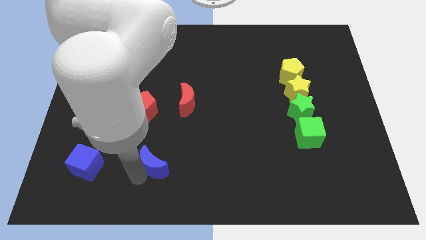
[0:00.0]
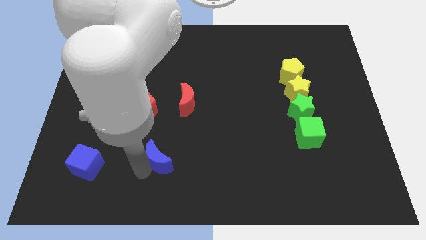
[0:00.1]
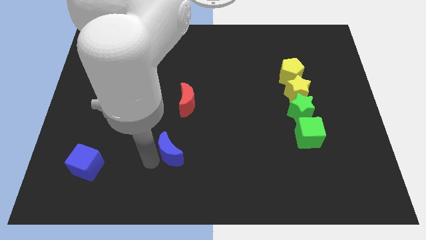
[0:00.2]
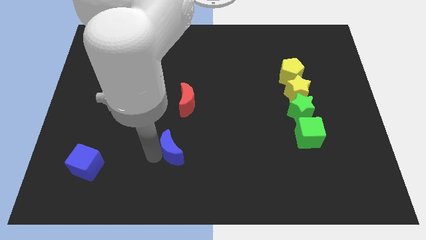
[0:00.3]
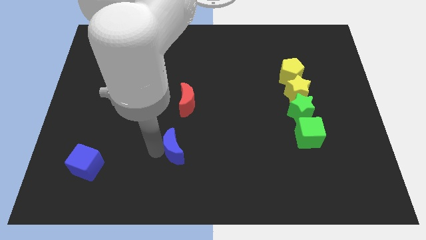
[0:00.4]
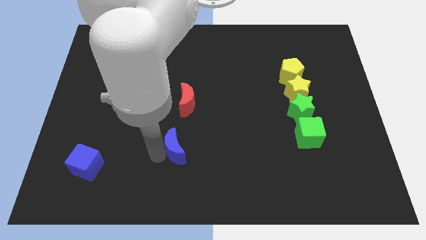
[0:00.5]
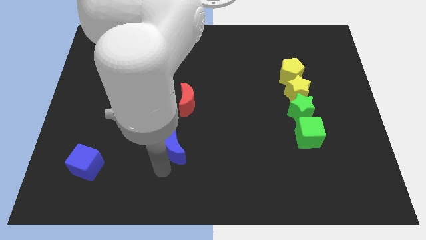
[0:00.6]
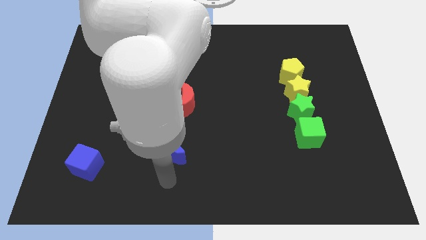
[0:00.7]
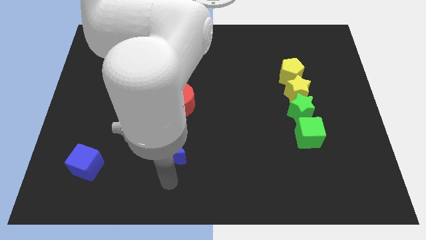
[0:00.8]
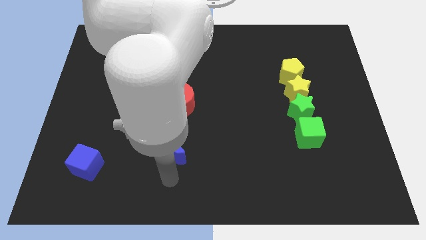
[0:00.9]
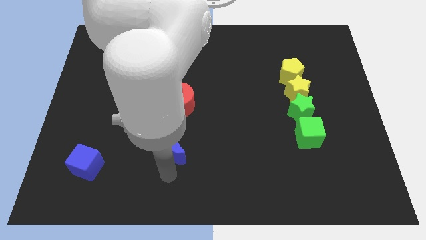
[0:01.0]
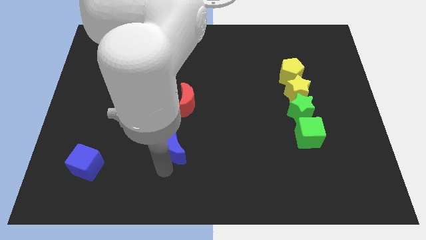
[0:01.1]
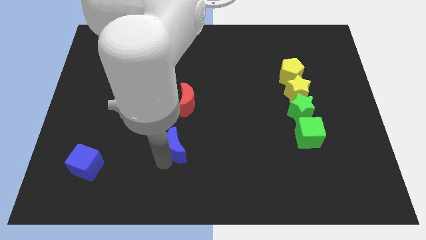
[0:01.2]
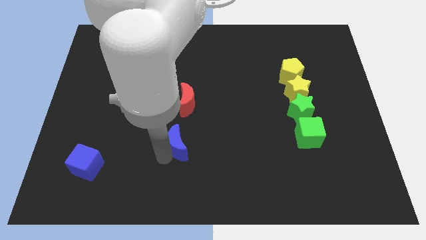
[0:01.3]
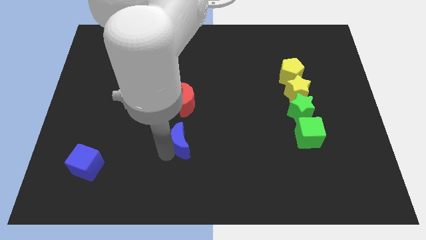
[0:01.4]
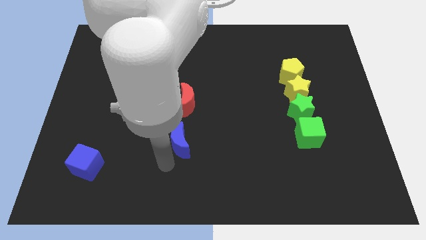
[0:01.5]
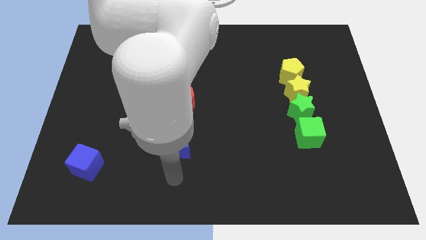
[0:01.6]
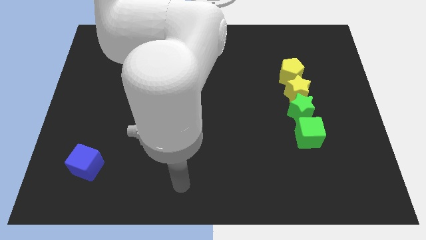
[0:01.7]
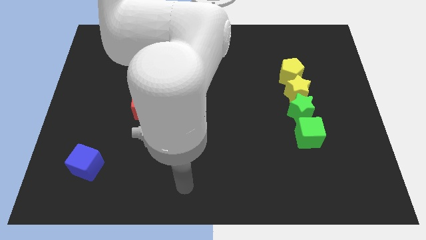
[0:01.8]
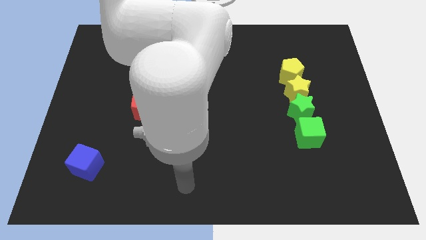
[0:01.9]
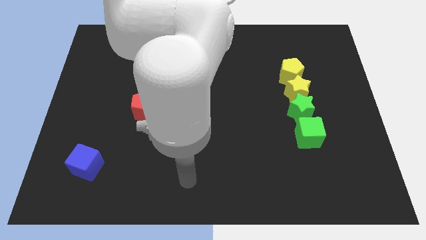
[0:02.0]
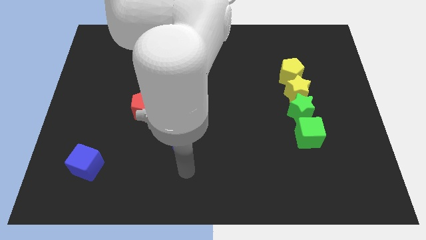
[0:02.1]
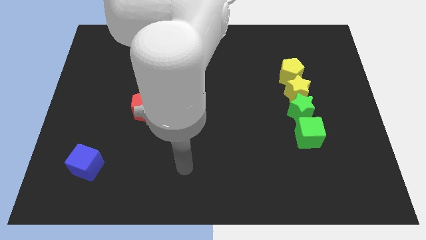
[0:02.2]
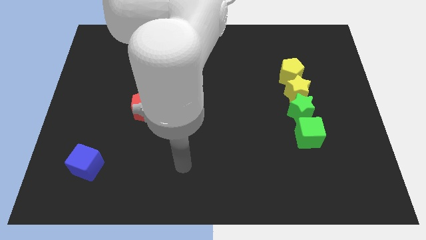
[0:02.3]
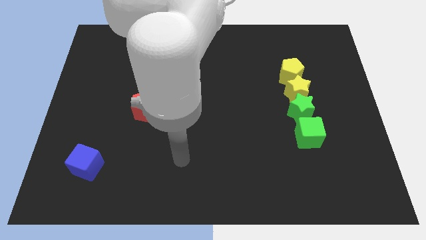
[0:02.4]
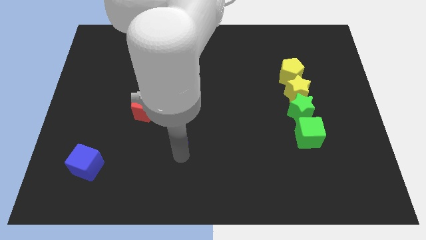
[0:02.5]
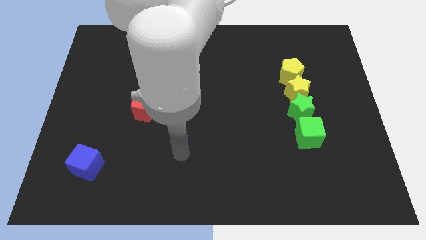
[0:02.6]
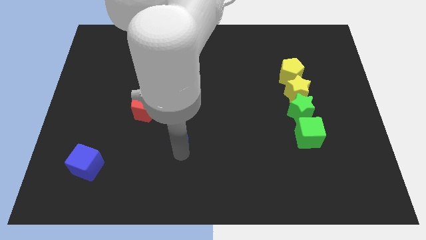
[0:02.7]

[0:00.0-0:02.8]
move the blue crescent to the bottom of the red crescent

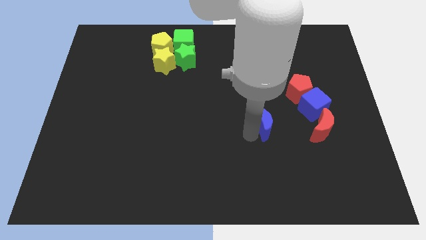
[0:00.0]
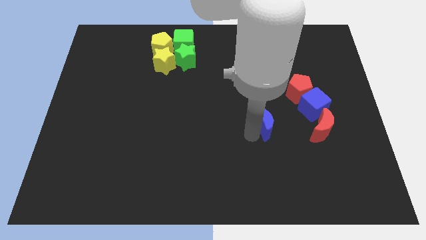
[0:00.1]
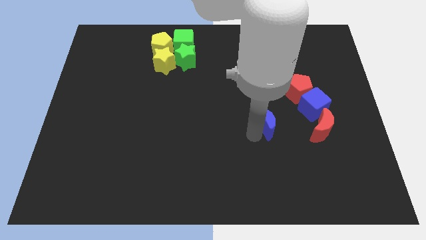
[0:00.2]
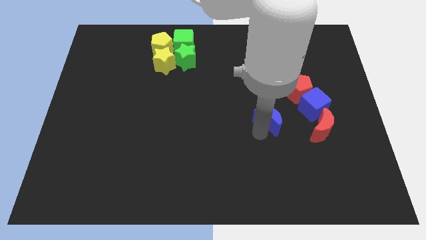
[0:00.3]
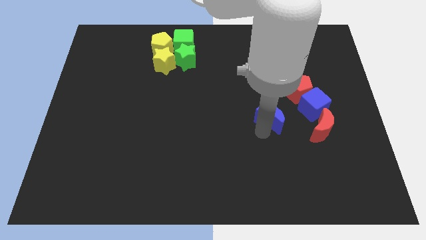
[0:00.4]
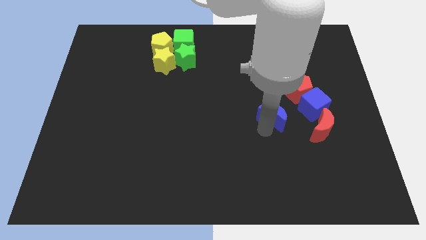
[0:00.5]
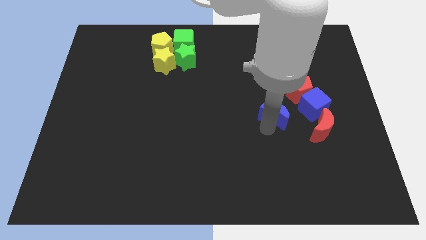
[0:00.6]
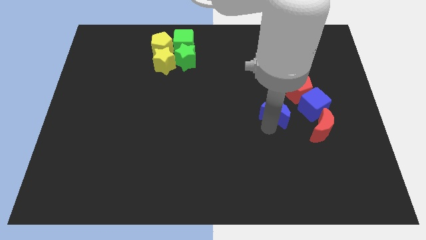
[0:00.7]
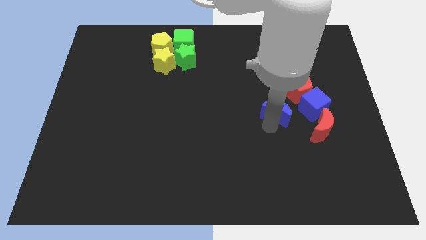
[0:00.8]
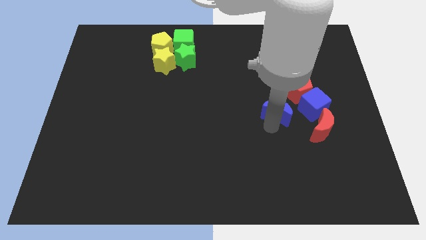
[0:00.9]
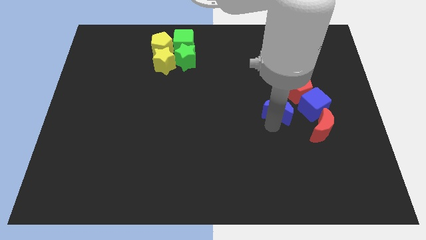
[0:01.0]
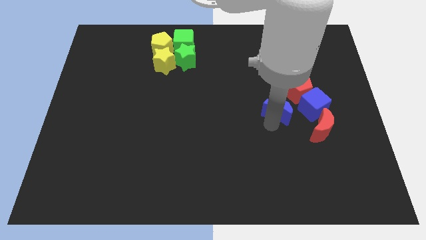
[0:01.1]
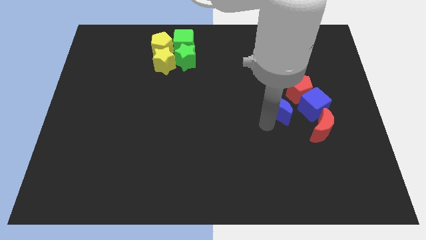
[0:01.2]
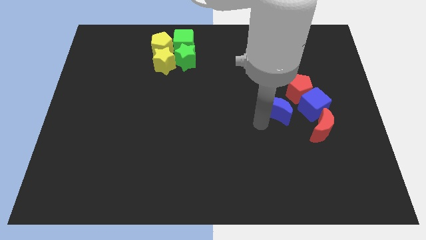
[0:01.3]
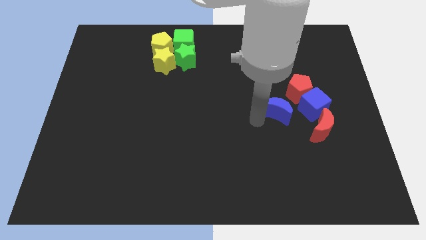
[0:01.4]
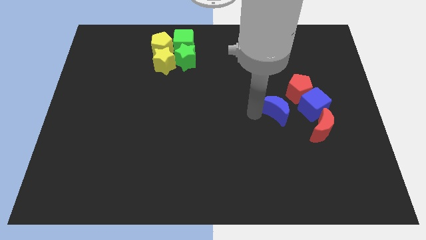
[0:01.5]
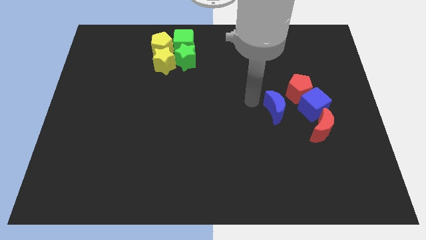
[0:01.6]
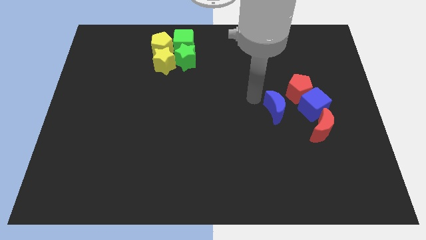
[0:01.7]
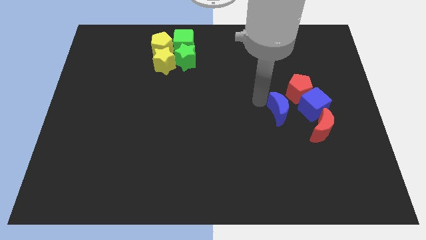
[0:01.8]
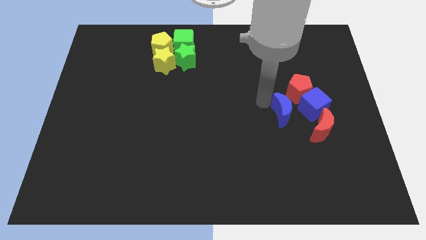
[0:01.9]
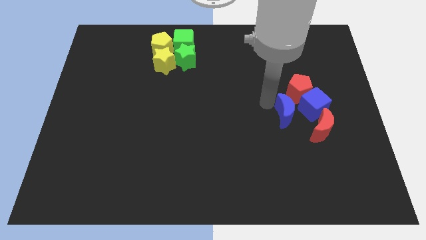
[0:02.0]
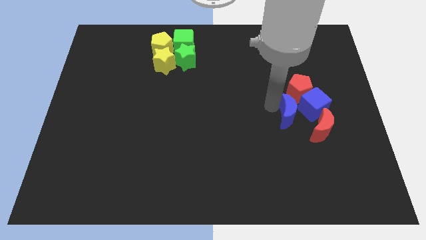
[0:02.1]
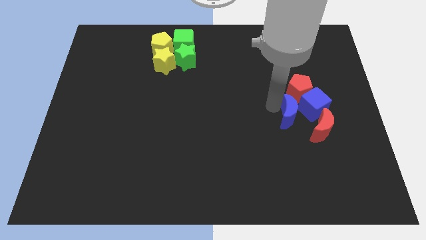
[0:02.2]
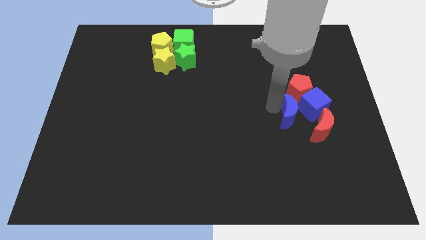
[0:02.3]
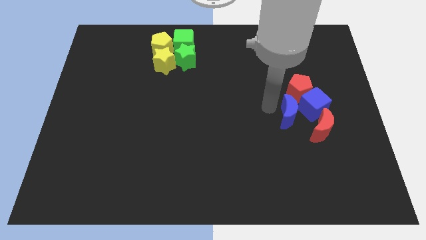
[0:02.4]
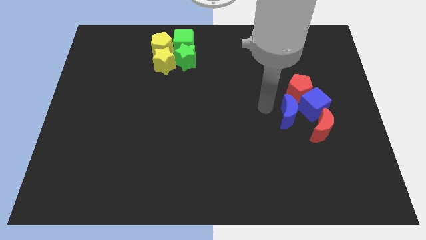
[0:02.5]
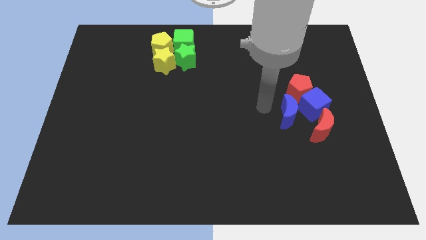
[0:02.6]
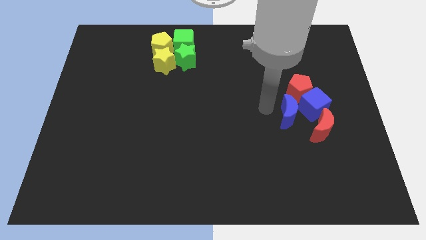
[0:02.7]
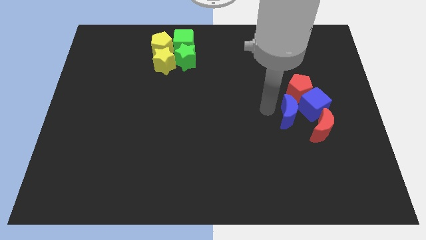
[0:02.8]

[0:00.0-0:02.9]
move blue moon to the left of blue cube

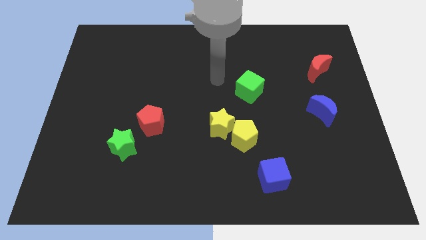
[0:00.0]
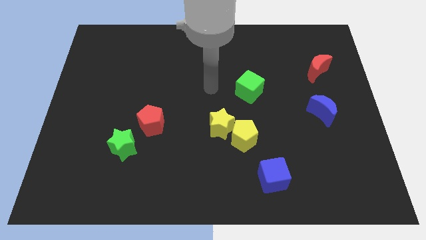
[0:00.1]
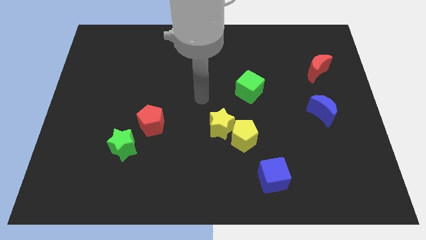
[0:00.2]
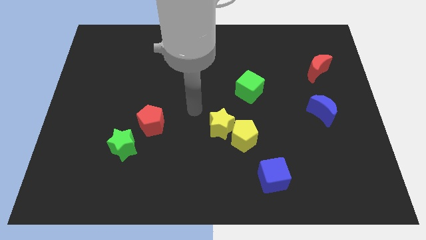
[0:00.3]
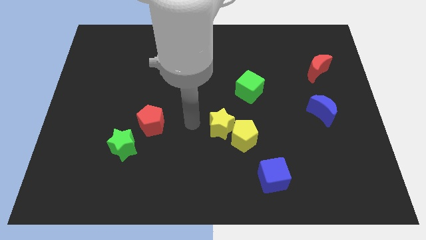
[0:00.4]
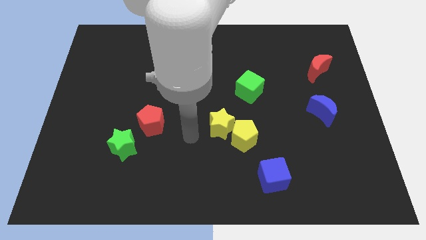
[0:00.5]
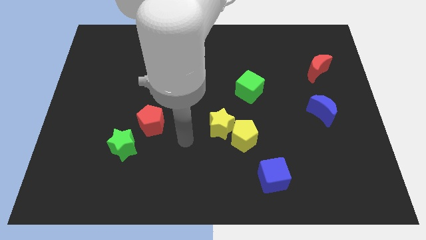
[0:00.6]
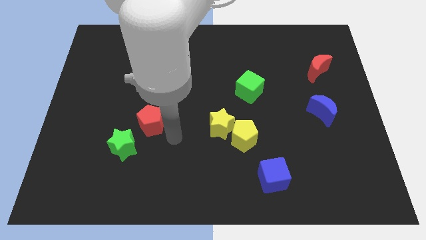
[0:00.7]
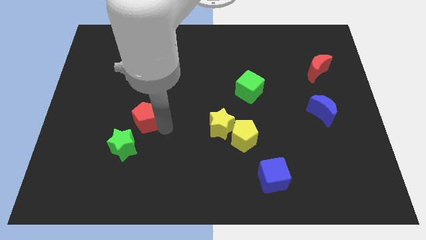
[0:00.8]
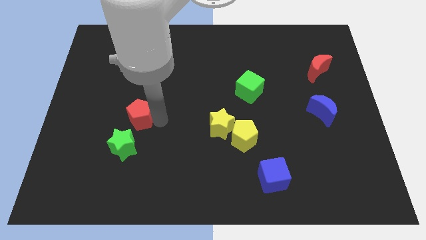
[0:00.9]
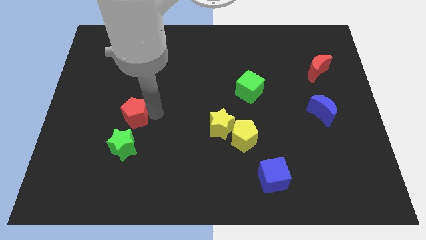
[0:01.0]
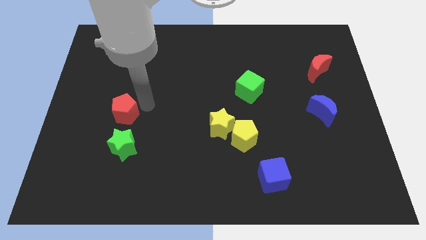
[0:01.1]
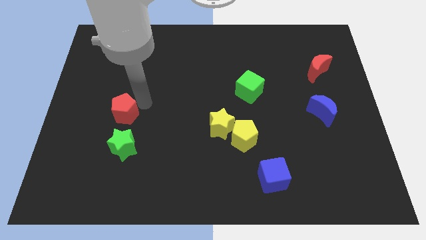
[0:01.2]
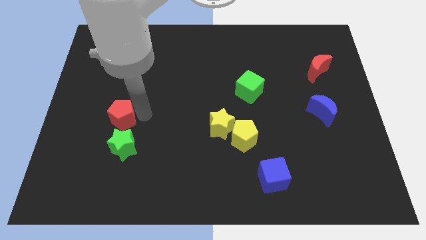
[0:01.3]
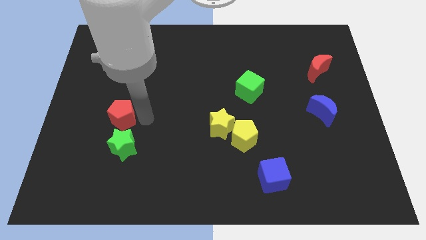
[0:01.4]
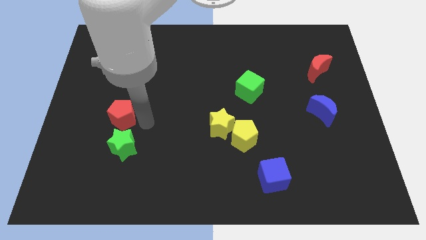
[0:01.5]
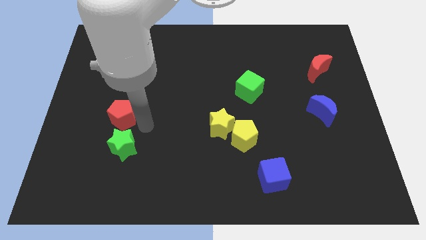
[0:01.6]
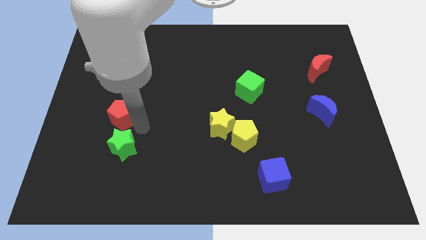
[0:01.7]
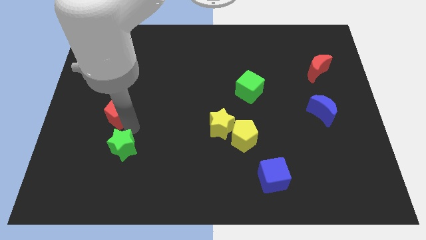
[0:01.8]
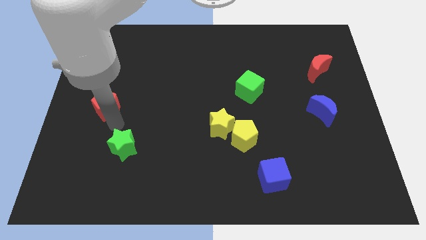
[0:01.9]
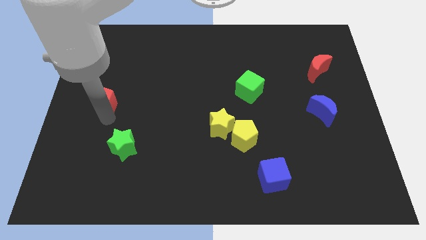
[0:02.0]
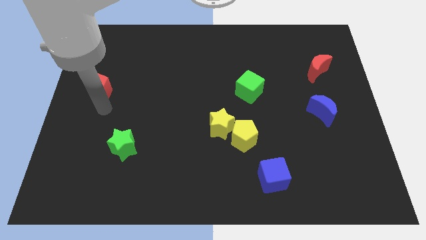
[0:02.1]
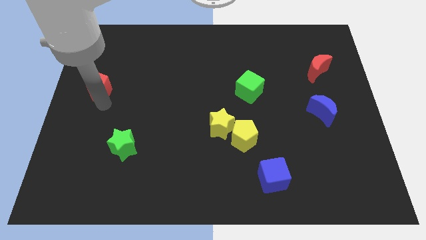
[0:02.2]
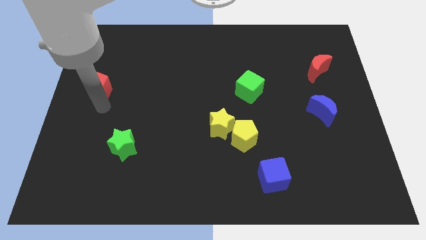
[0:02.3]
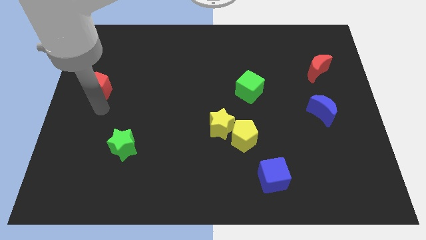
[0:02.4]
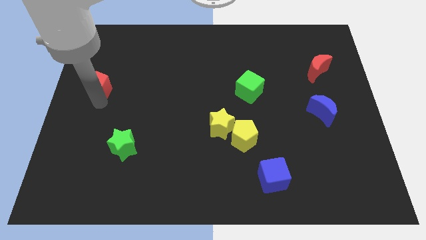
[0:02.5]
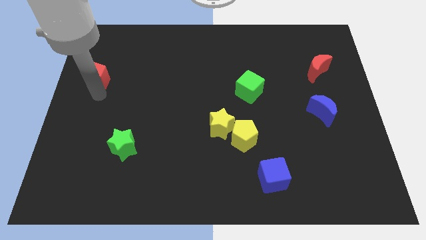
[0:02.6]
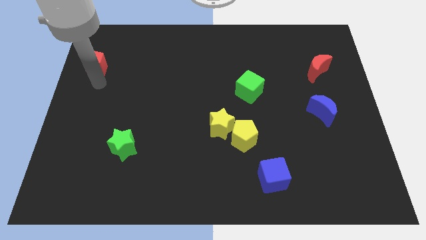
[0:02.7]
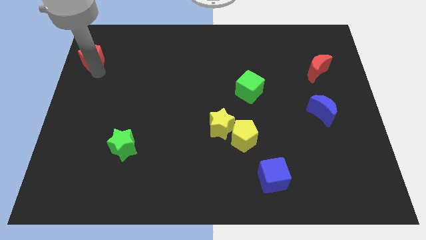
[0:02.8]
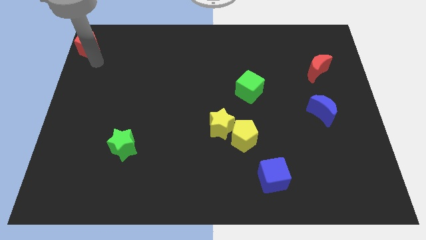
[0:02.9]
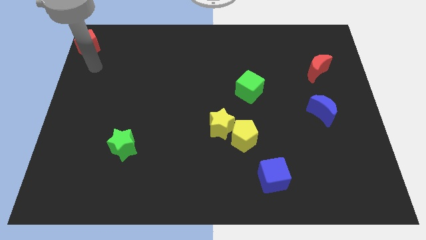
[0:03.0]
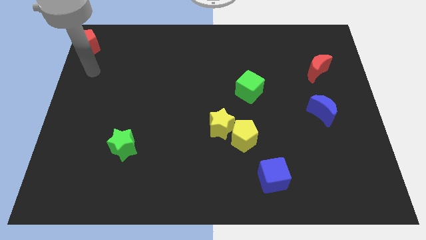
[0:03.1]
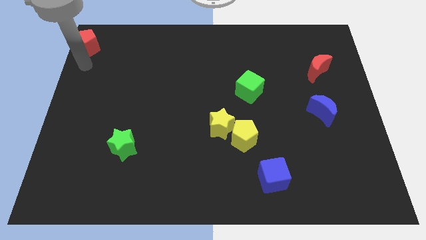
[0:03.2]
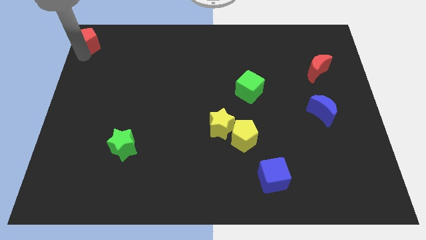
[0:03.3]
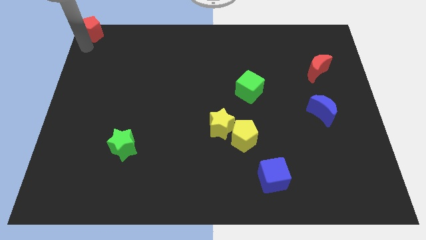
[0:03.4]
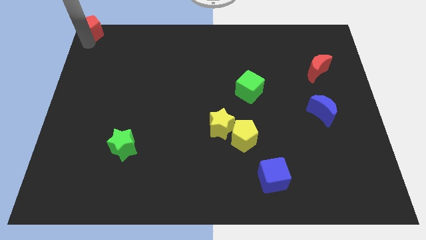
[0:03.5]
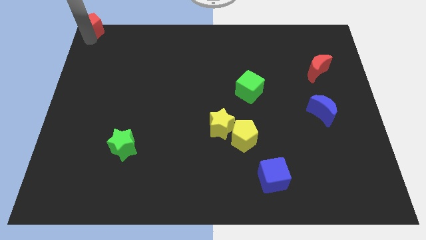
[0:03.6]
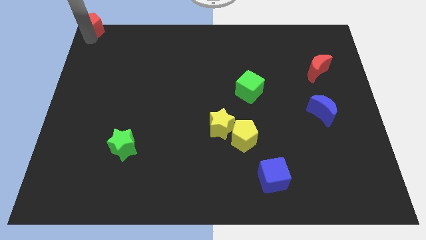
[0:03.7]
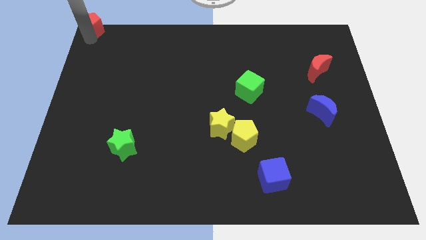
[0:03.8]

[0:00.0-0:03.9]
push red pentagon to the top left corner of the board
